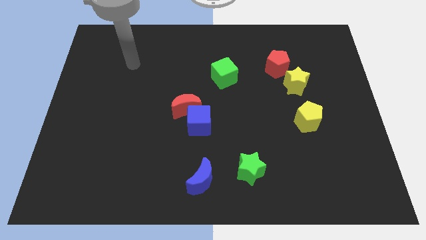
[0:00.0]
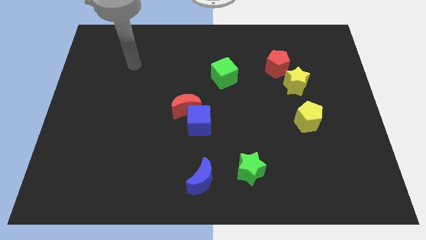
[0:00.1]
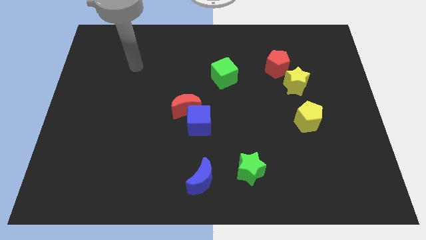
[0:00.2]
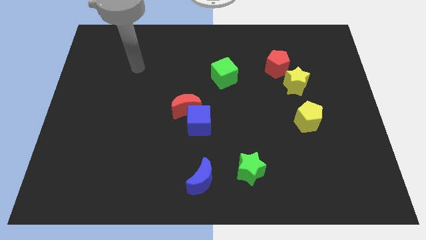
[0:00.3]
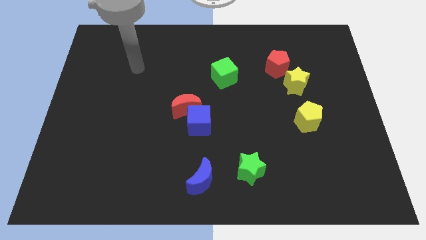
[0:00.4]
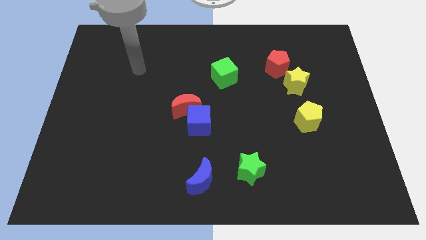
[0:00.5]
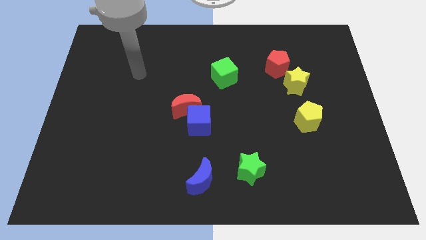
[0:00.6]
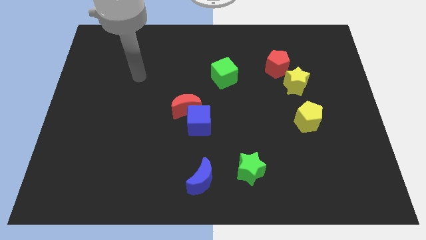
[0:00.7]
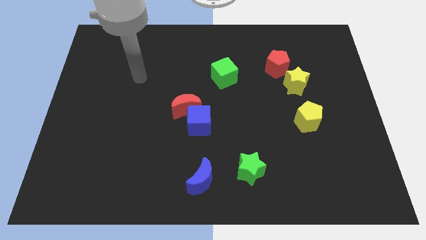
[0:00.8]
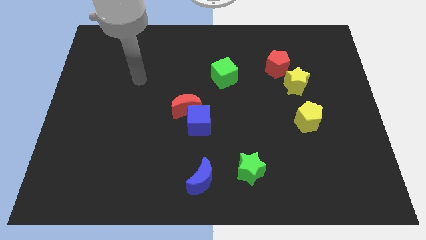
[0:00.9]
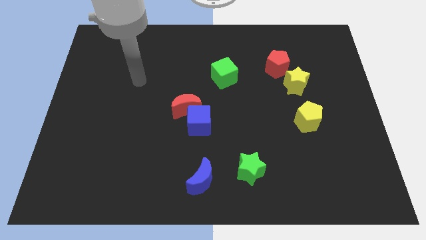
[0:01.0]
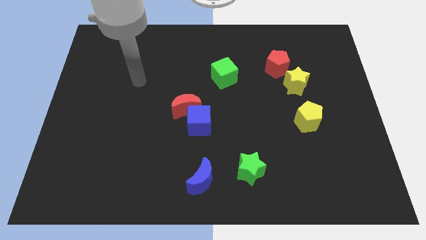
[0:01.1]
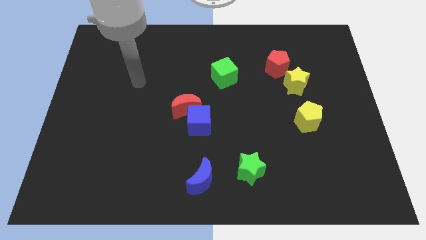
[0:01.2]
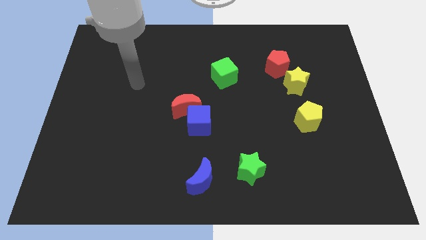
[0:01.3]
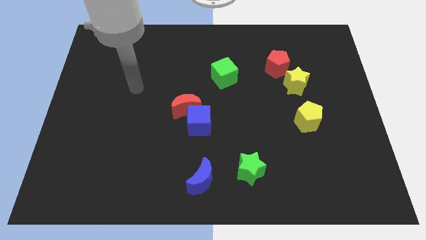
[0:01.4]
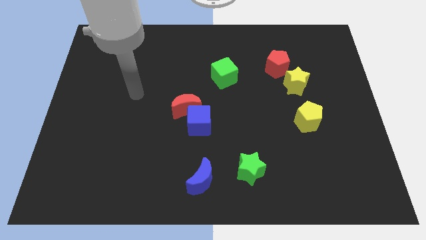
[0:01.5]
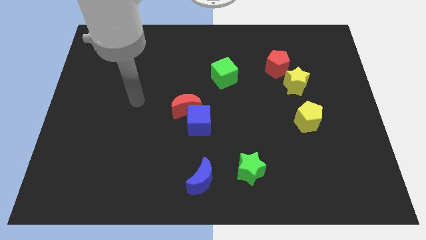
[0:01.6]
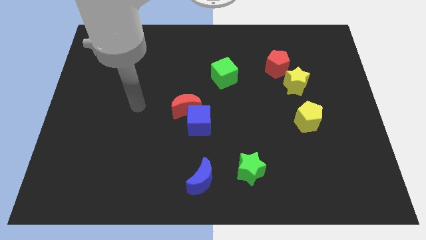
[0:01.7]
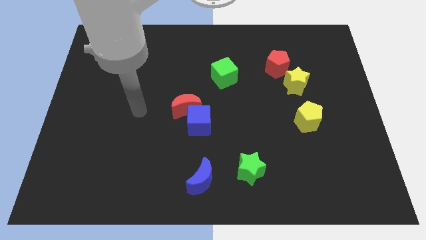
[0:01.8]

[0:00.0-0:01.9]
go and point your hand at the left of the red crescent

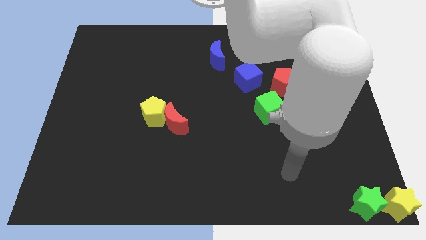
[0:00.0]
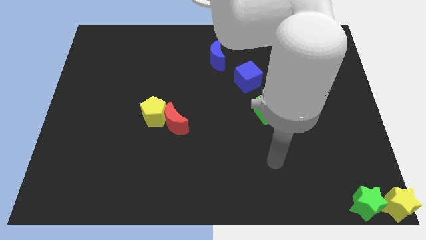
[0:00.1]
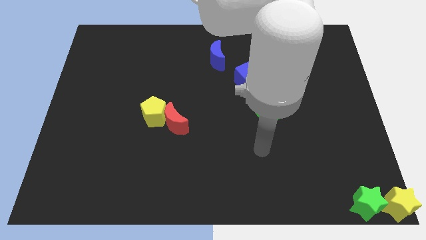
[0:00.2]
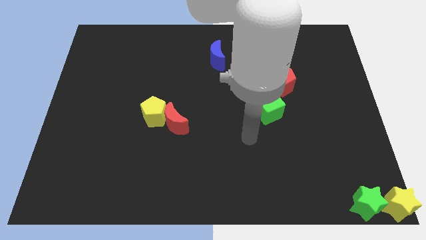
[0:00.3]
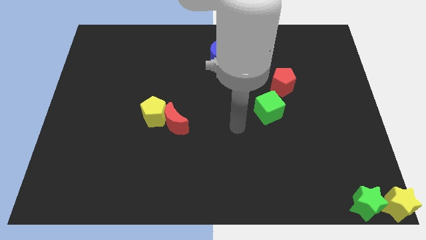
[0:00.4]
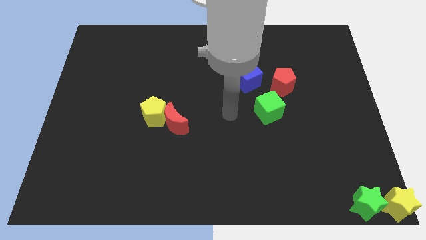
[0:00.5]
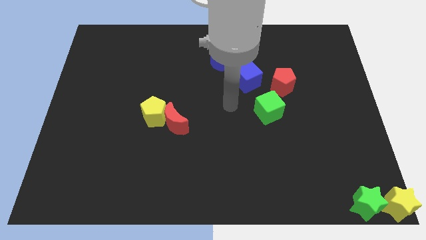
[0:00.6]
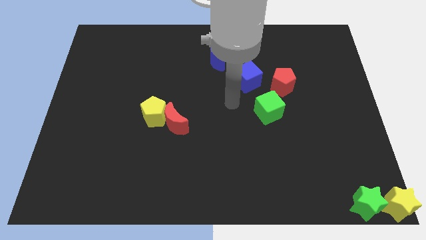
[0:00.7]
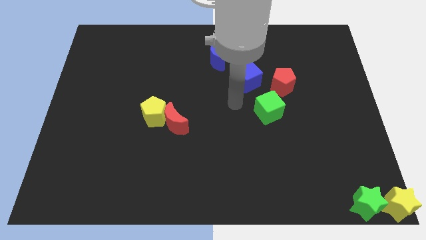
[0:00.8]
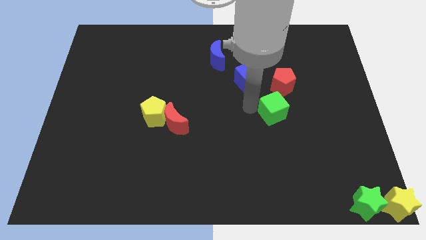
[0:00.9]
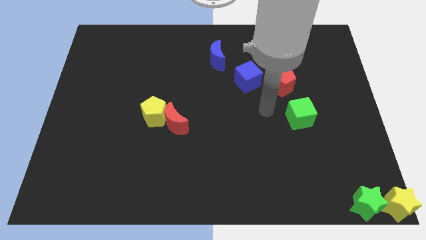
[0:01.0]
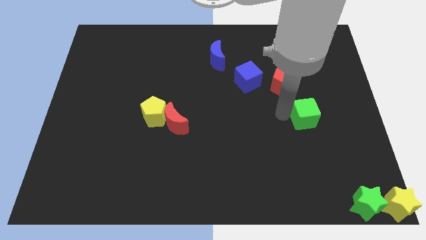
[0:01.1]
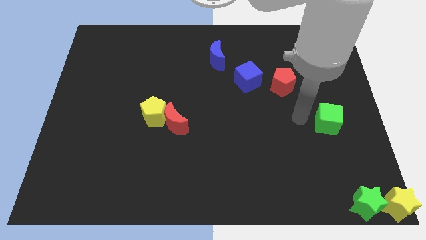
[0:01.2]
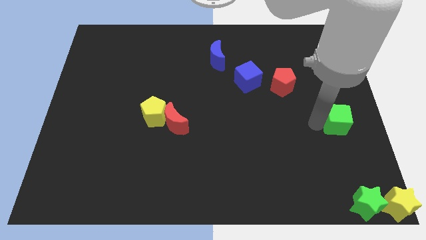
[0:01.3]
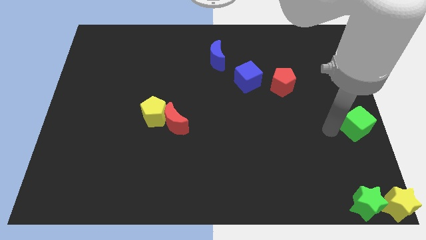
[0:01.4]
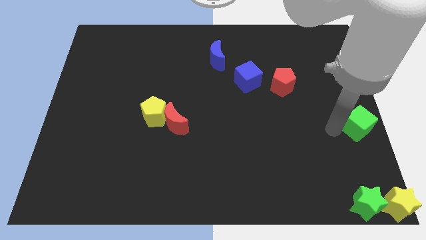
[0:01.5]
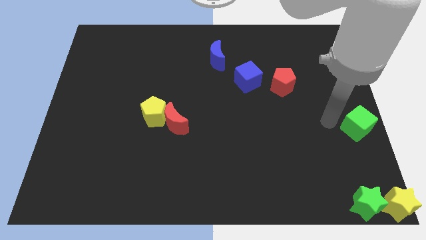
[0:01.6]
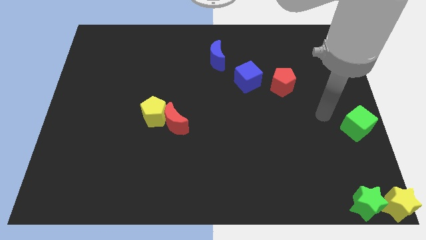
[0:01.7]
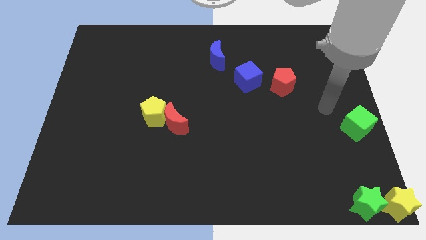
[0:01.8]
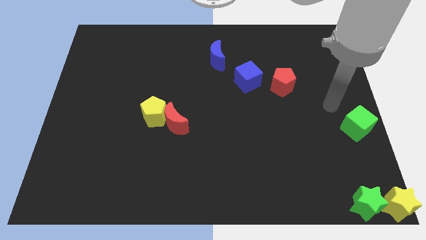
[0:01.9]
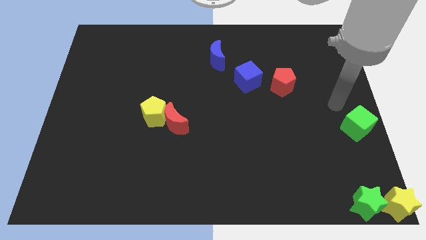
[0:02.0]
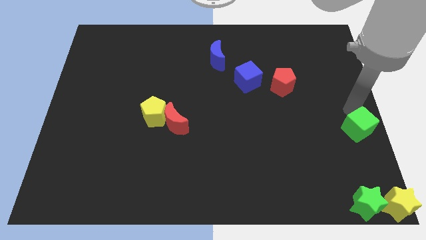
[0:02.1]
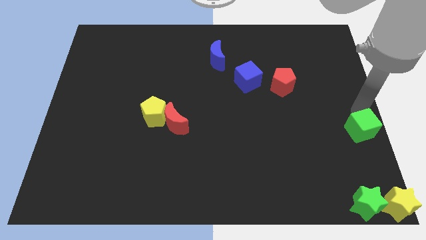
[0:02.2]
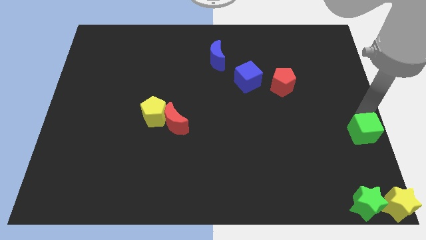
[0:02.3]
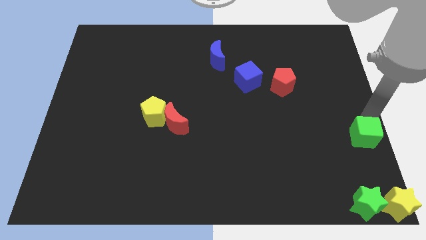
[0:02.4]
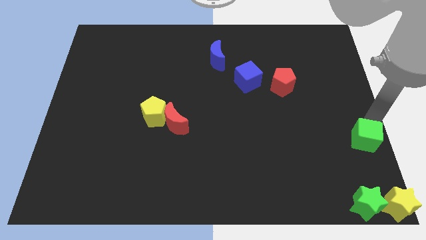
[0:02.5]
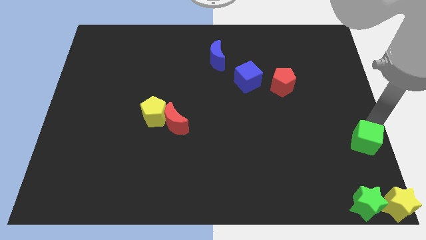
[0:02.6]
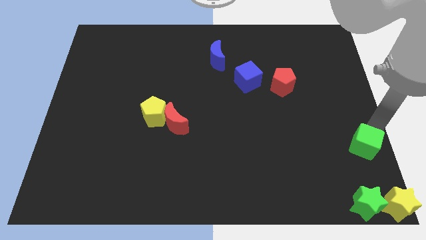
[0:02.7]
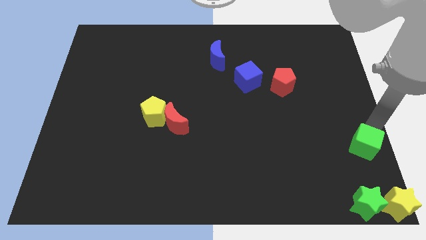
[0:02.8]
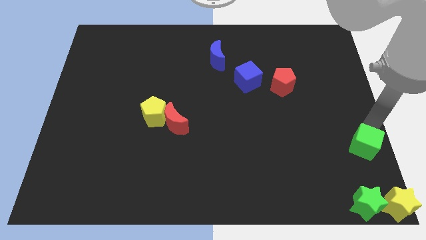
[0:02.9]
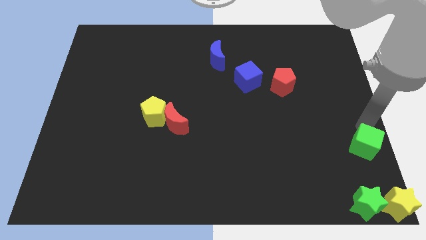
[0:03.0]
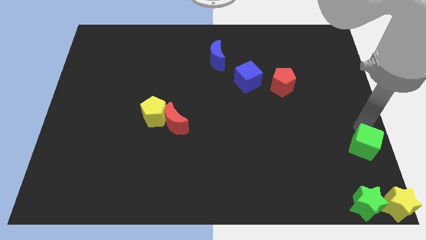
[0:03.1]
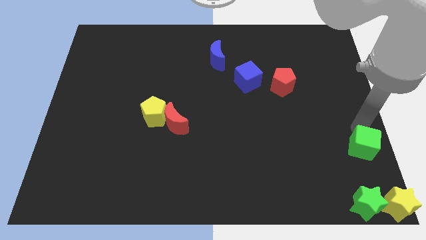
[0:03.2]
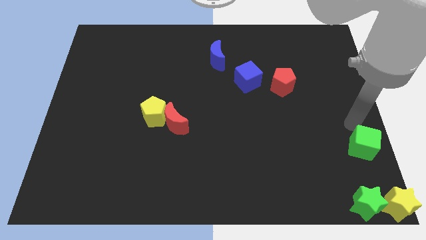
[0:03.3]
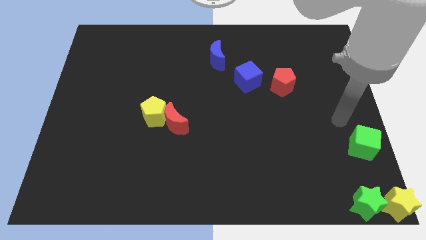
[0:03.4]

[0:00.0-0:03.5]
push the green cube towards the bottom right of the board

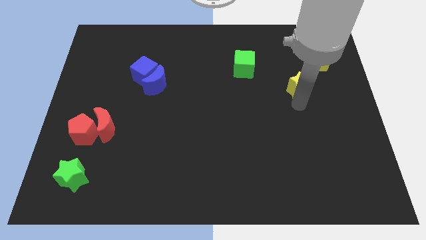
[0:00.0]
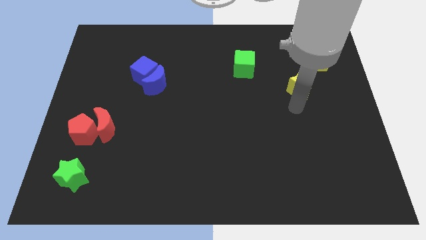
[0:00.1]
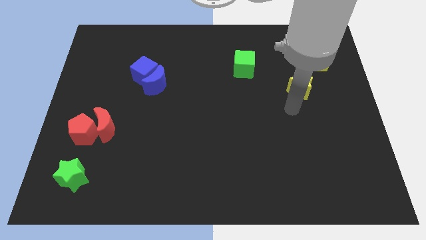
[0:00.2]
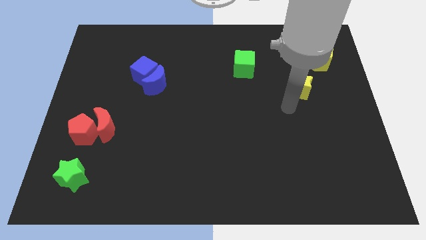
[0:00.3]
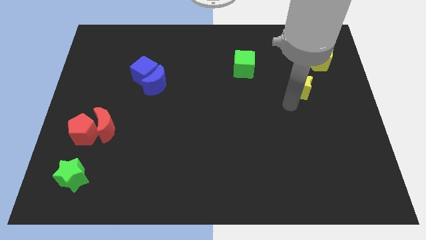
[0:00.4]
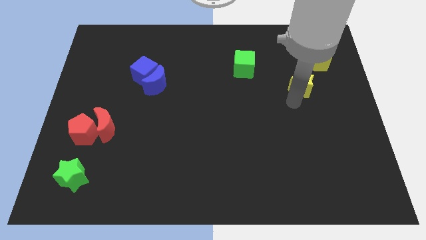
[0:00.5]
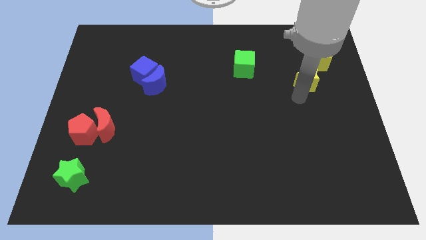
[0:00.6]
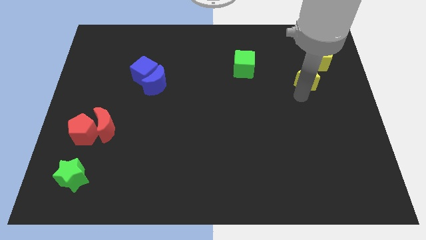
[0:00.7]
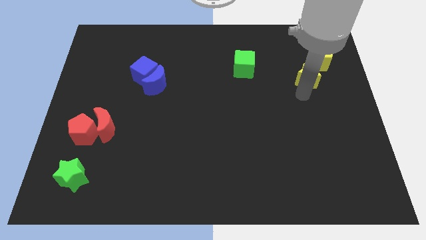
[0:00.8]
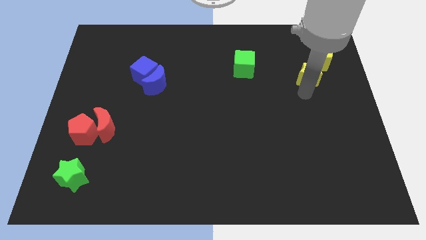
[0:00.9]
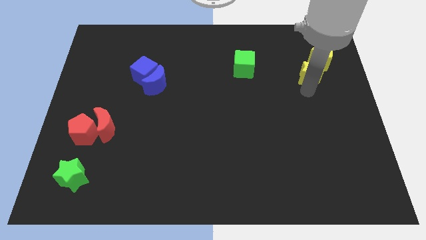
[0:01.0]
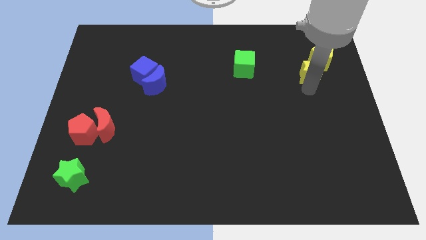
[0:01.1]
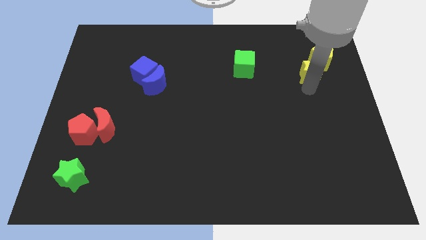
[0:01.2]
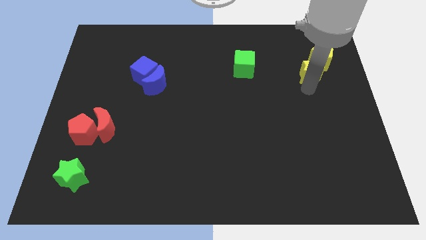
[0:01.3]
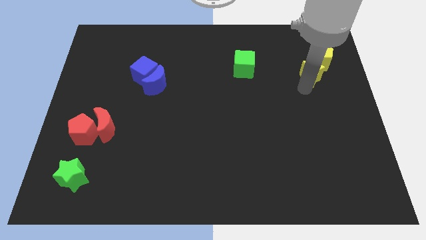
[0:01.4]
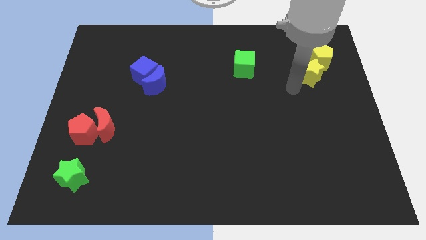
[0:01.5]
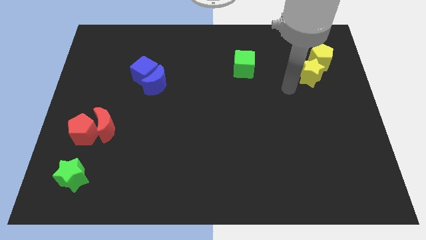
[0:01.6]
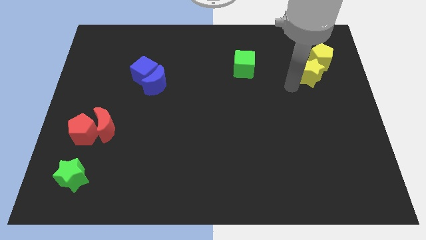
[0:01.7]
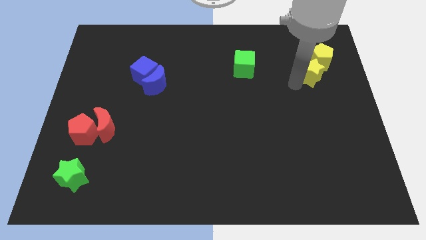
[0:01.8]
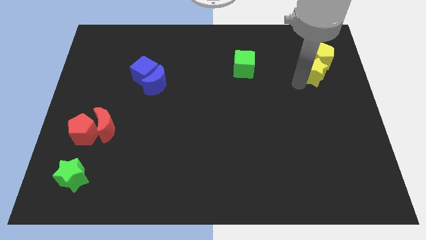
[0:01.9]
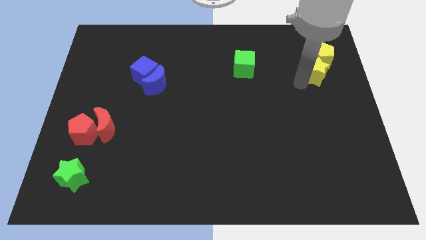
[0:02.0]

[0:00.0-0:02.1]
move the yellow star to the bottom side of the yellow pentagon

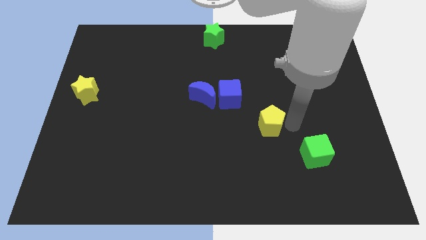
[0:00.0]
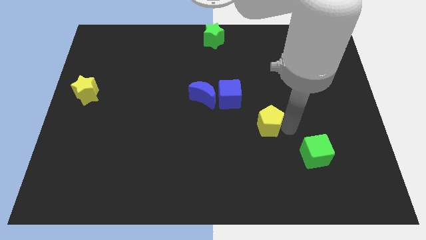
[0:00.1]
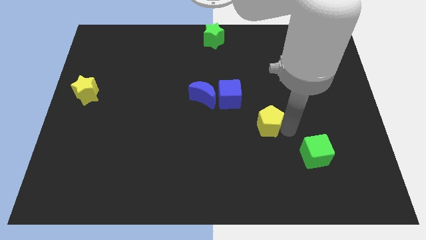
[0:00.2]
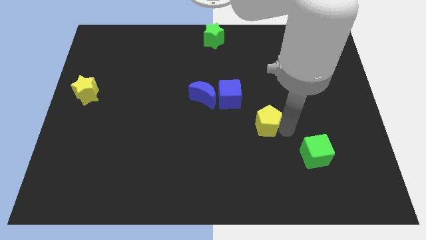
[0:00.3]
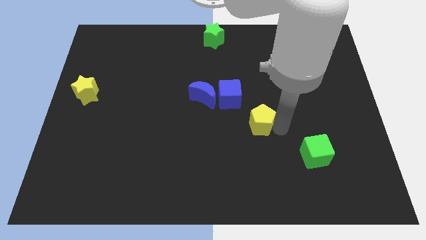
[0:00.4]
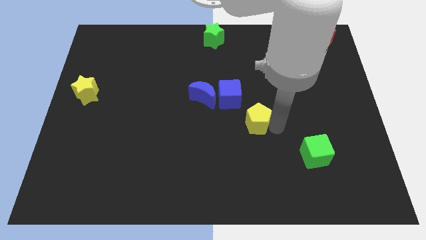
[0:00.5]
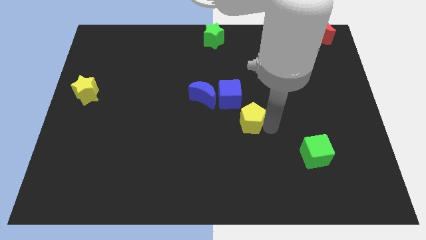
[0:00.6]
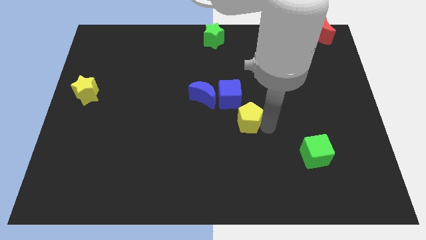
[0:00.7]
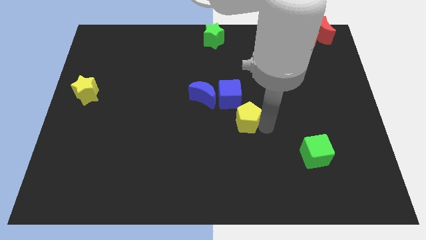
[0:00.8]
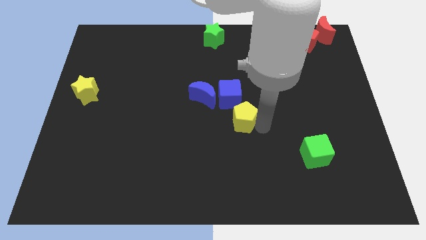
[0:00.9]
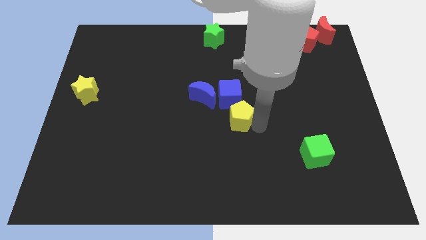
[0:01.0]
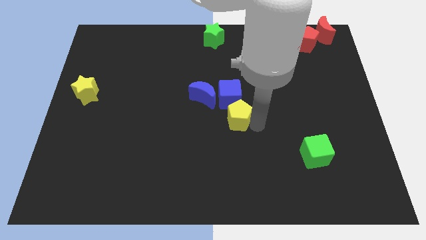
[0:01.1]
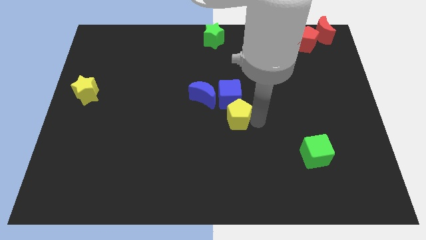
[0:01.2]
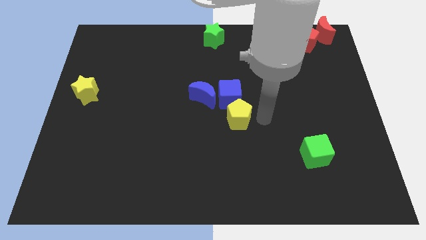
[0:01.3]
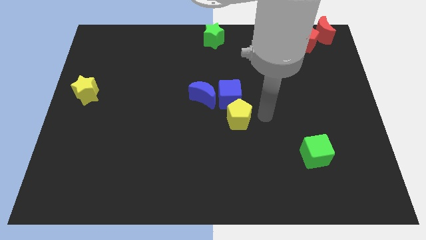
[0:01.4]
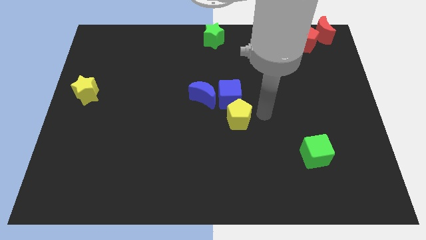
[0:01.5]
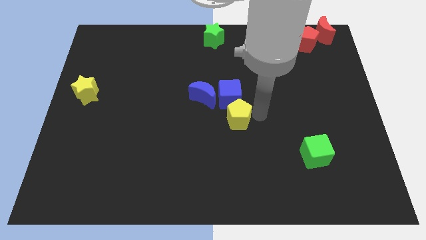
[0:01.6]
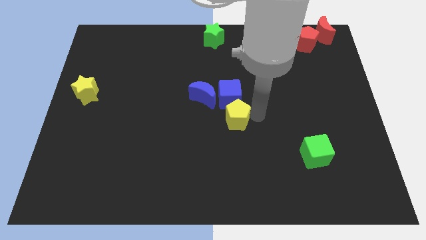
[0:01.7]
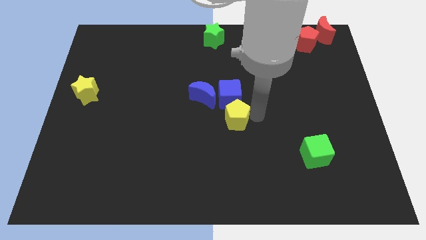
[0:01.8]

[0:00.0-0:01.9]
push the yellow pentagon to the bottom of the blue cube
